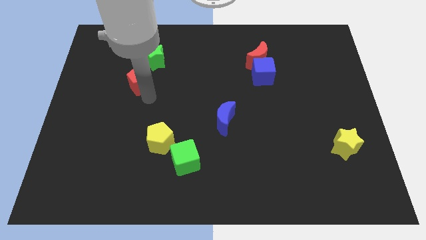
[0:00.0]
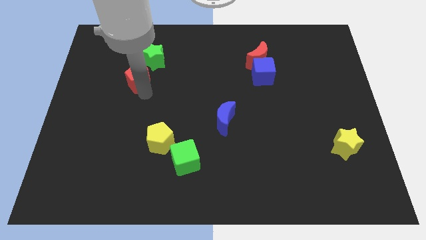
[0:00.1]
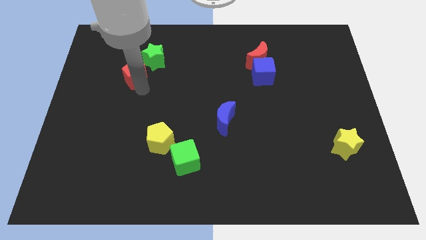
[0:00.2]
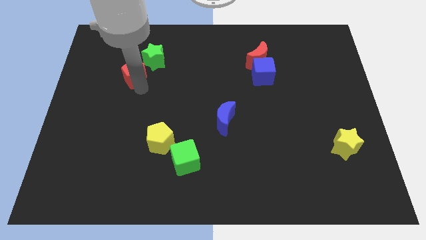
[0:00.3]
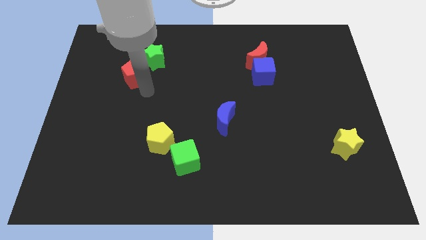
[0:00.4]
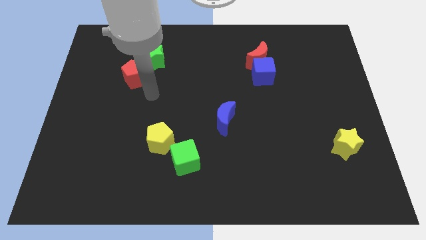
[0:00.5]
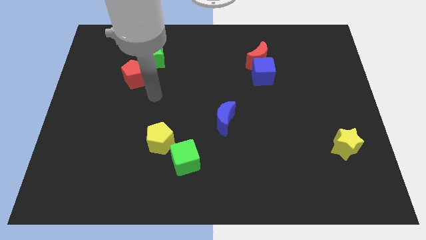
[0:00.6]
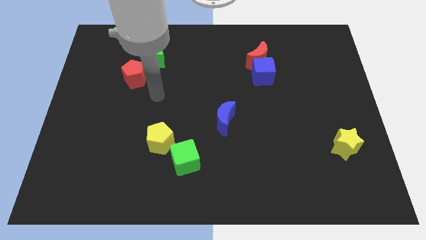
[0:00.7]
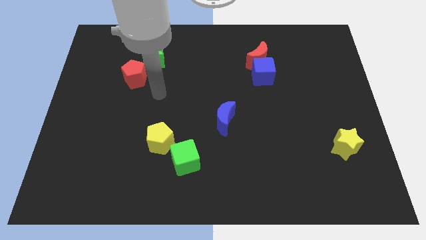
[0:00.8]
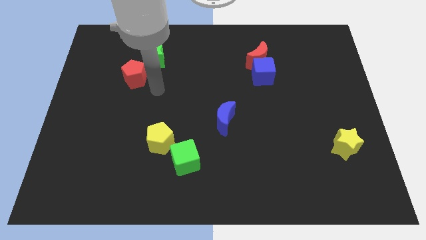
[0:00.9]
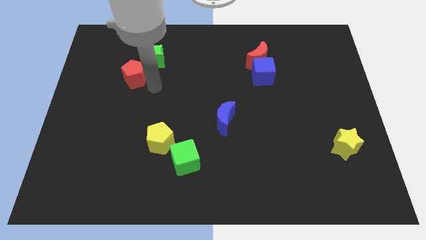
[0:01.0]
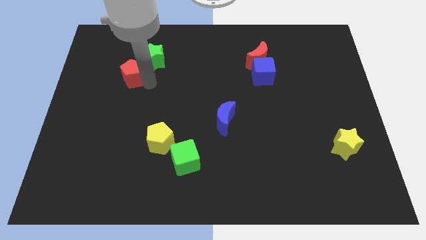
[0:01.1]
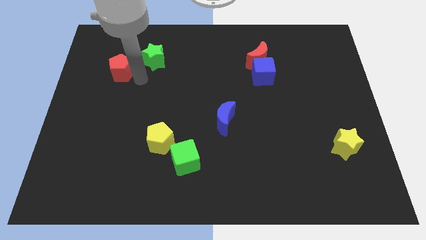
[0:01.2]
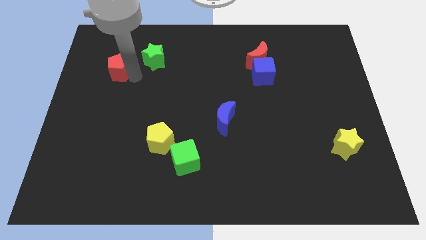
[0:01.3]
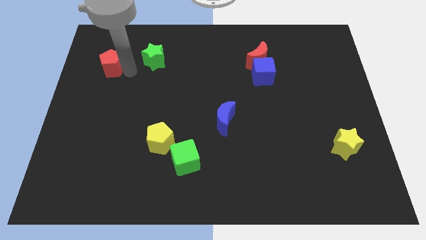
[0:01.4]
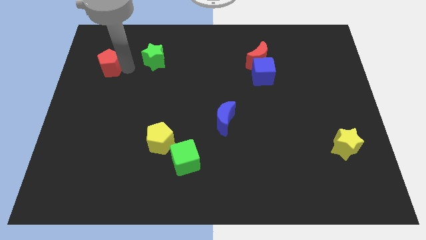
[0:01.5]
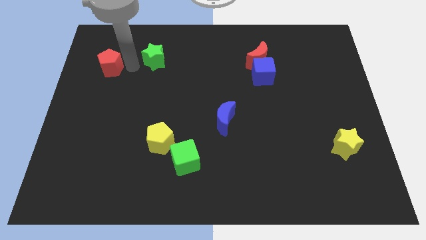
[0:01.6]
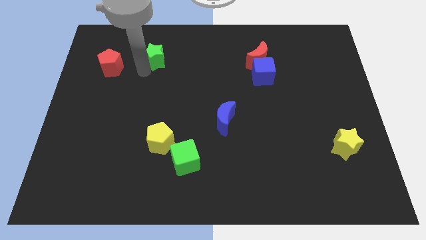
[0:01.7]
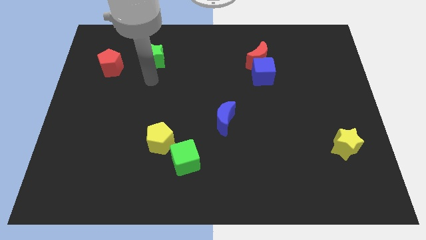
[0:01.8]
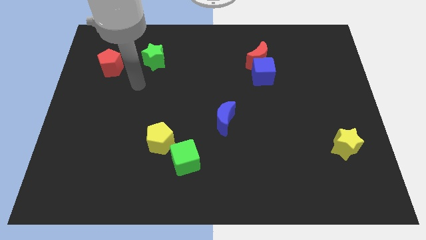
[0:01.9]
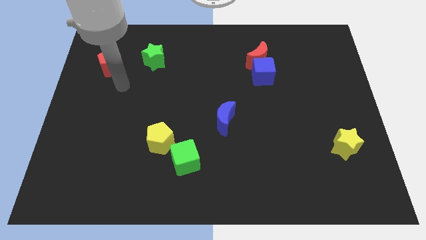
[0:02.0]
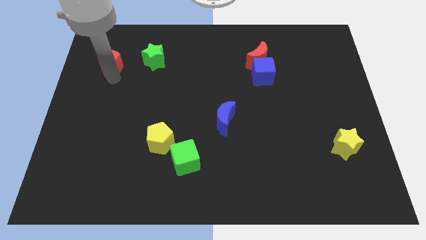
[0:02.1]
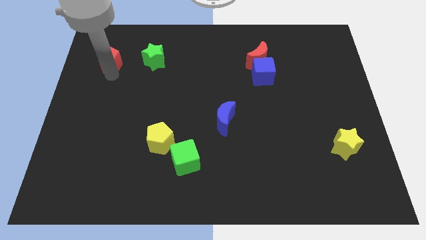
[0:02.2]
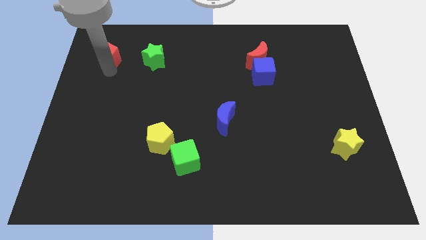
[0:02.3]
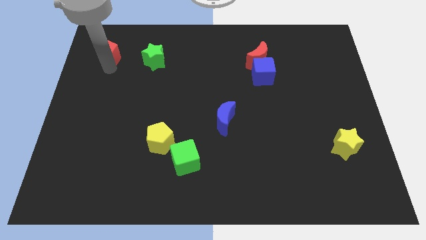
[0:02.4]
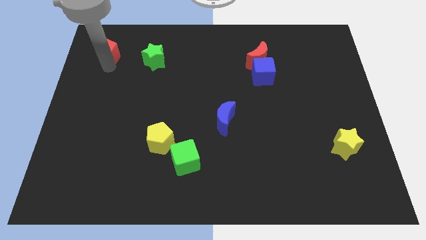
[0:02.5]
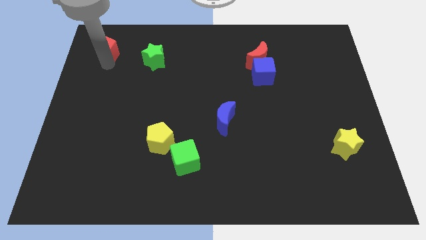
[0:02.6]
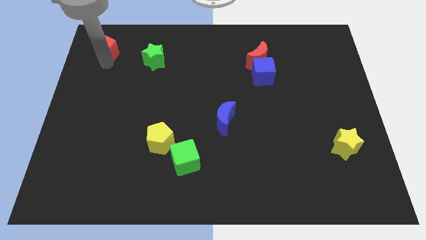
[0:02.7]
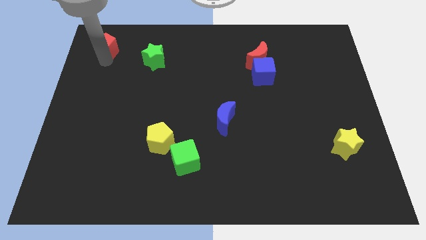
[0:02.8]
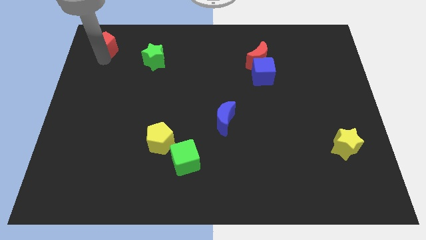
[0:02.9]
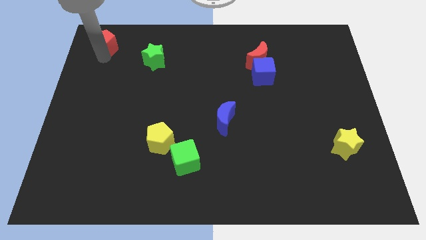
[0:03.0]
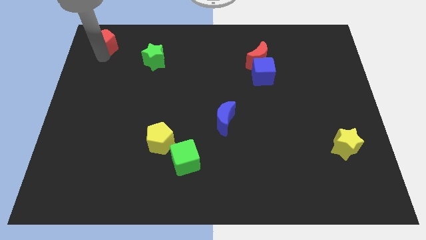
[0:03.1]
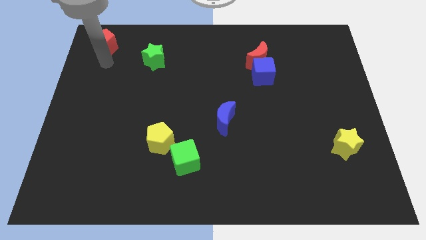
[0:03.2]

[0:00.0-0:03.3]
move the red pentagon to the top left of the green star

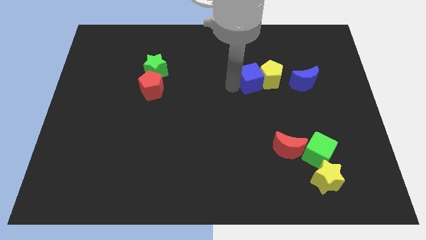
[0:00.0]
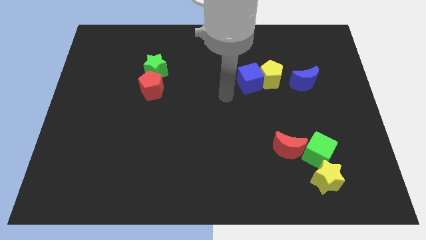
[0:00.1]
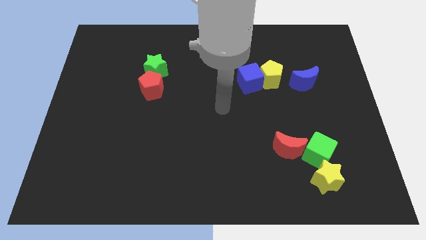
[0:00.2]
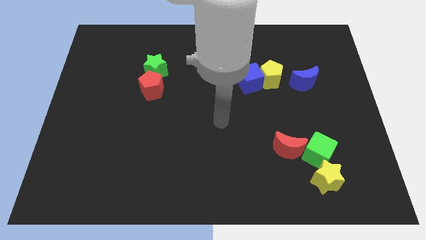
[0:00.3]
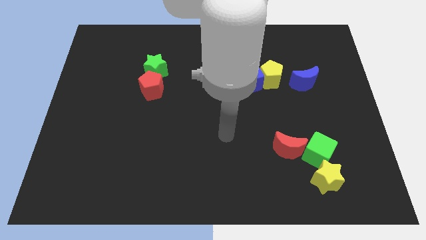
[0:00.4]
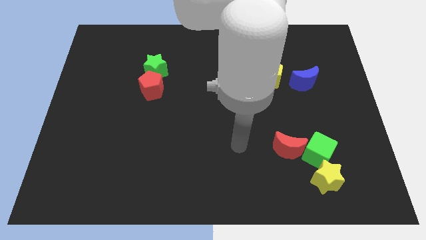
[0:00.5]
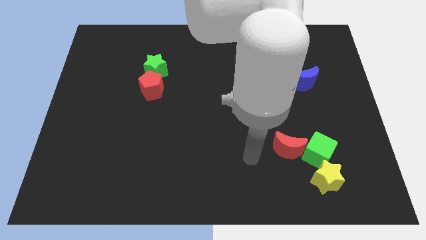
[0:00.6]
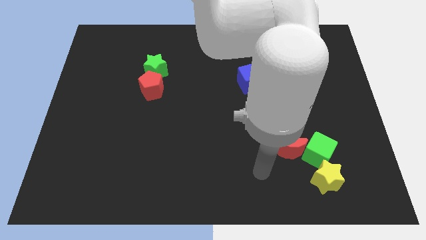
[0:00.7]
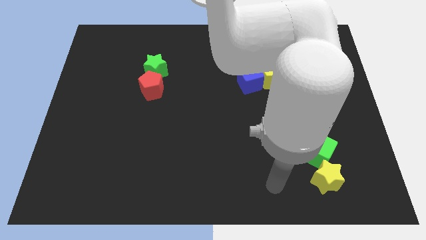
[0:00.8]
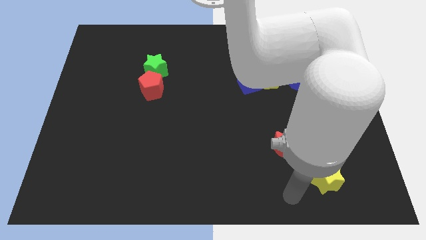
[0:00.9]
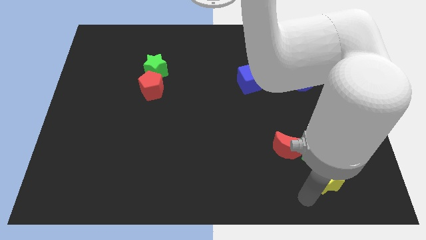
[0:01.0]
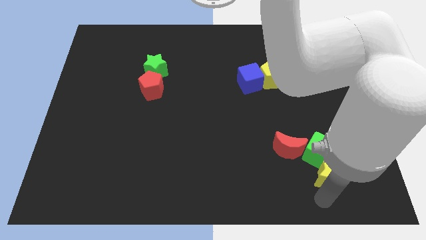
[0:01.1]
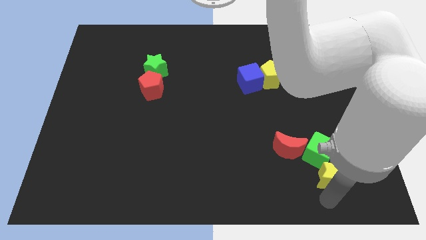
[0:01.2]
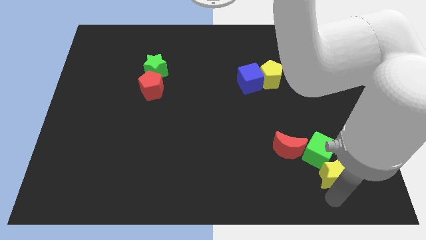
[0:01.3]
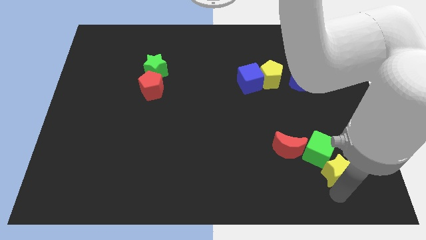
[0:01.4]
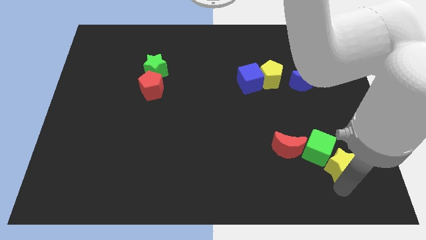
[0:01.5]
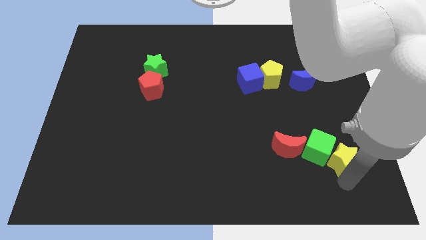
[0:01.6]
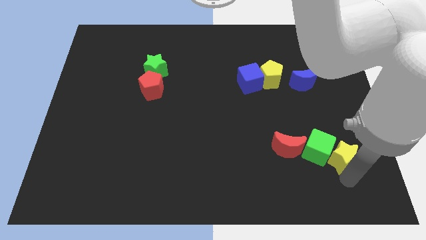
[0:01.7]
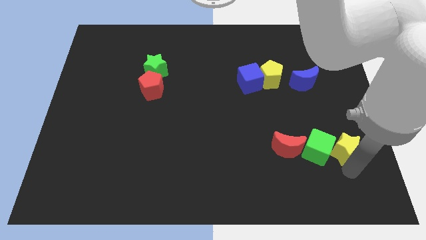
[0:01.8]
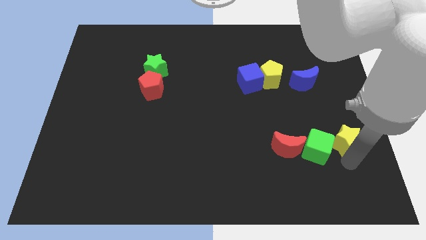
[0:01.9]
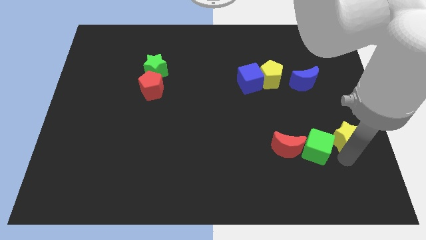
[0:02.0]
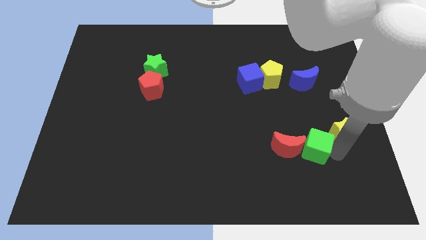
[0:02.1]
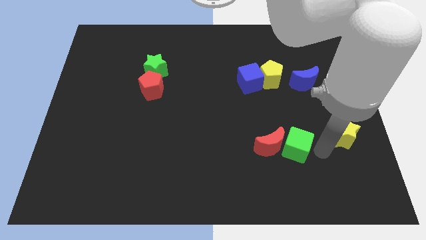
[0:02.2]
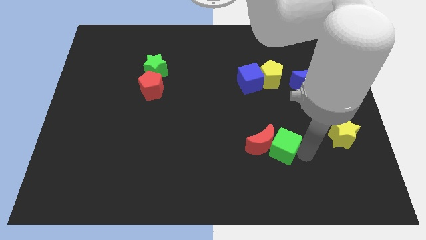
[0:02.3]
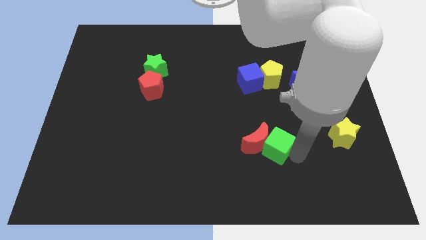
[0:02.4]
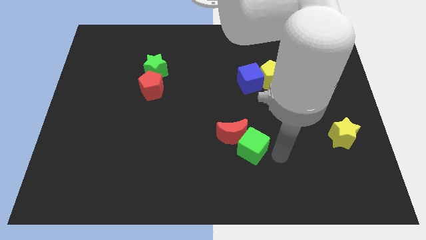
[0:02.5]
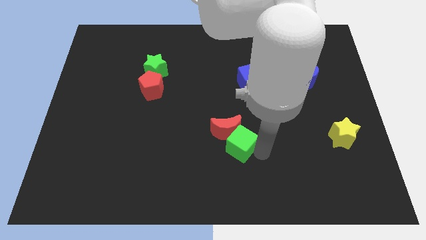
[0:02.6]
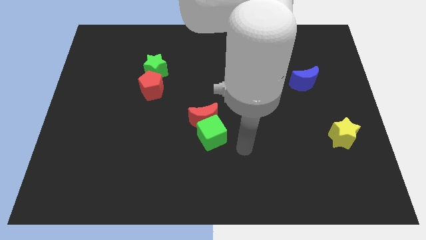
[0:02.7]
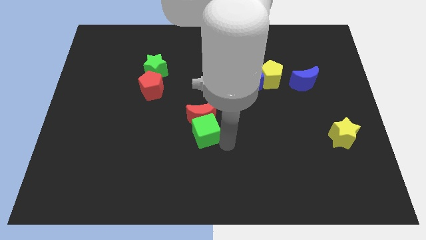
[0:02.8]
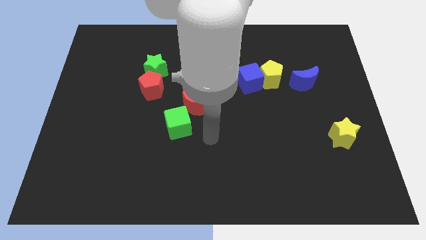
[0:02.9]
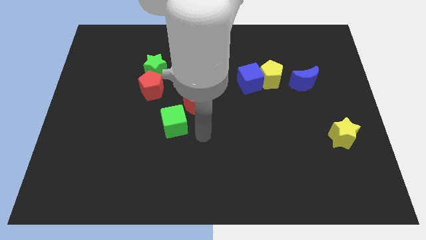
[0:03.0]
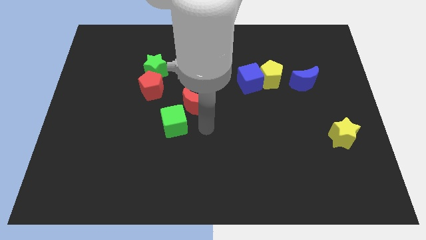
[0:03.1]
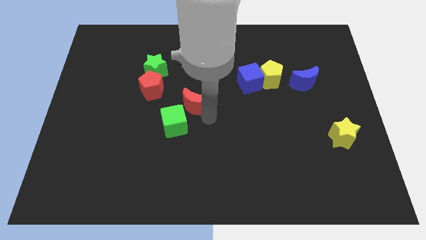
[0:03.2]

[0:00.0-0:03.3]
push both green cube and red f moon to center of the board

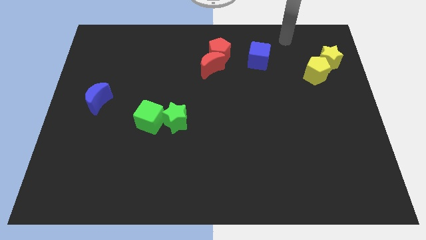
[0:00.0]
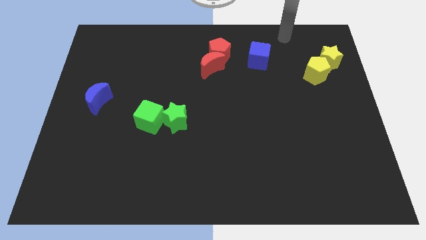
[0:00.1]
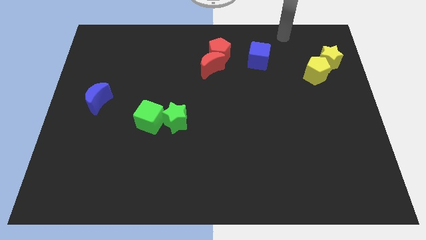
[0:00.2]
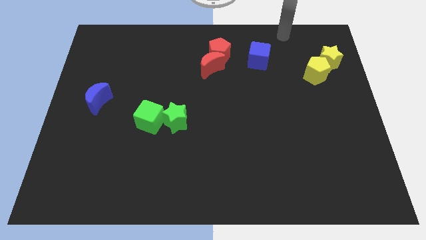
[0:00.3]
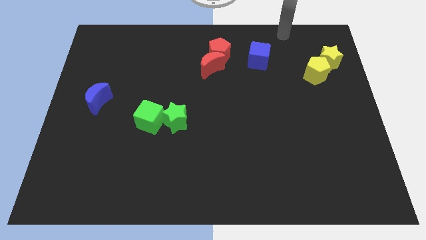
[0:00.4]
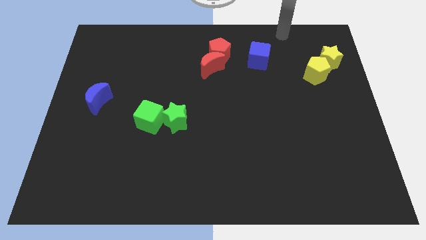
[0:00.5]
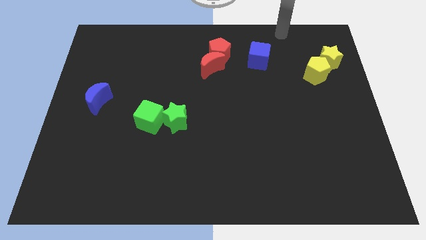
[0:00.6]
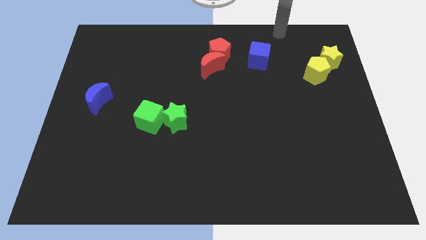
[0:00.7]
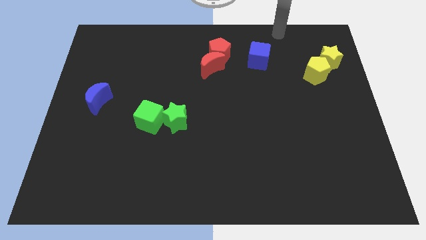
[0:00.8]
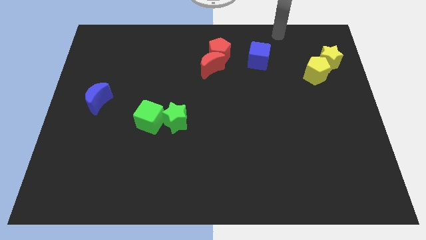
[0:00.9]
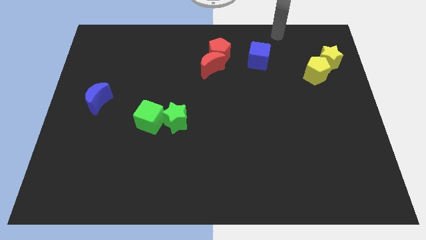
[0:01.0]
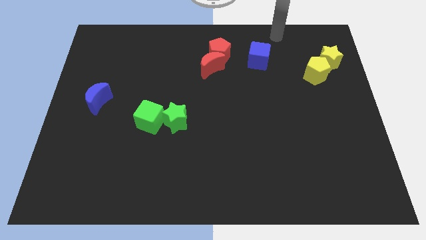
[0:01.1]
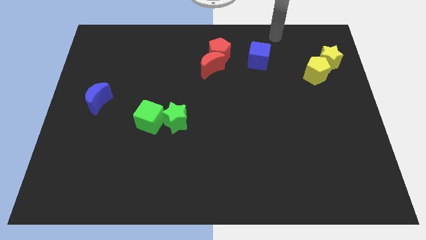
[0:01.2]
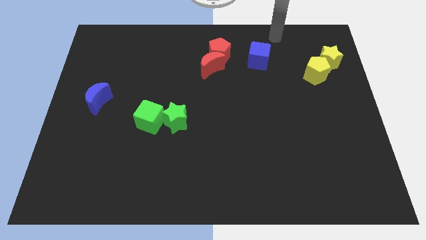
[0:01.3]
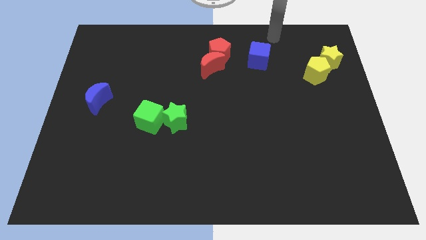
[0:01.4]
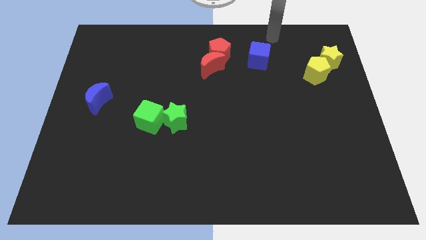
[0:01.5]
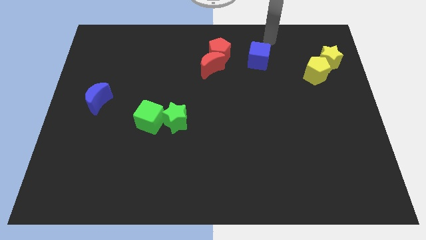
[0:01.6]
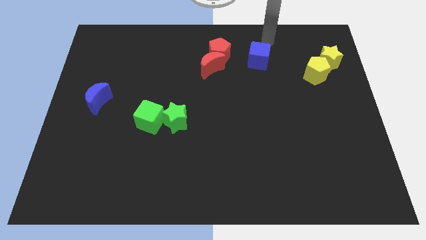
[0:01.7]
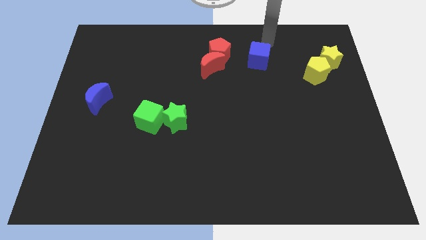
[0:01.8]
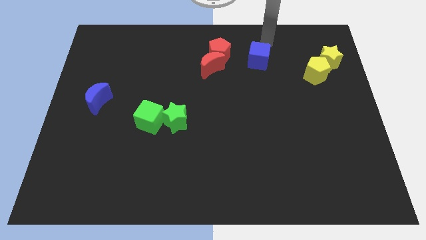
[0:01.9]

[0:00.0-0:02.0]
point your arm at the top of blue cube

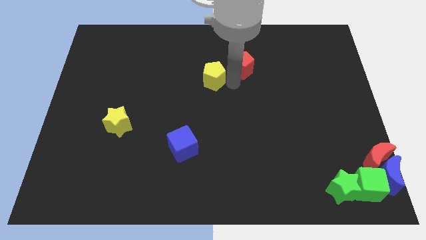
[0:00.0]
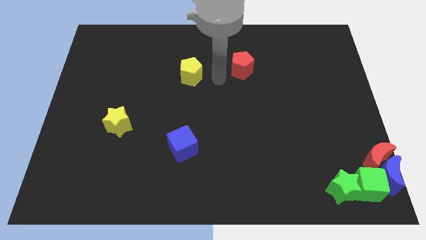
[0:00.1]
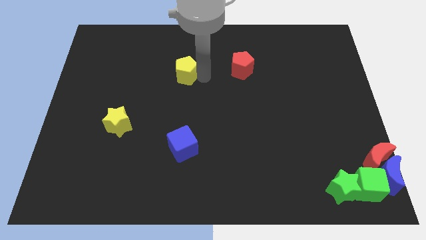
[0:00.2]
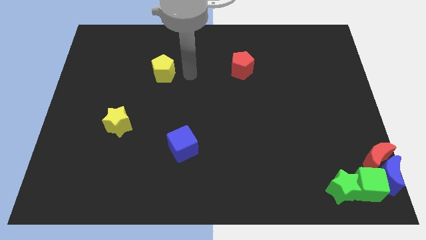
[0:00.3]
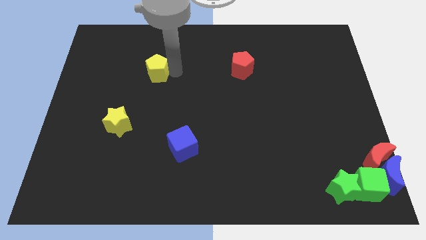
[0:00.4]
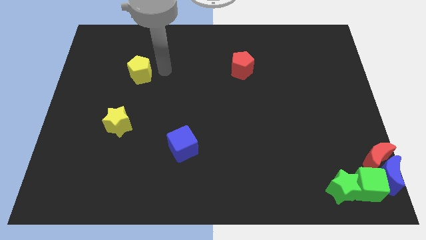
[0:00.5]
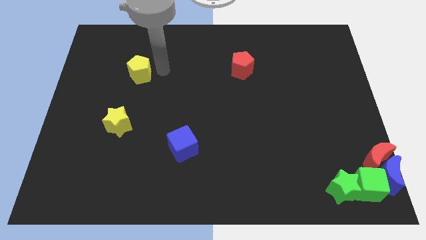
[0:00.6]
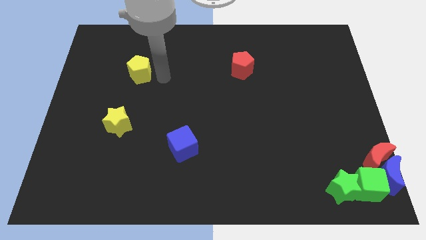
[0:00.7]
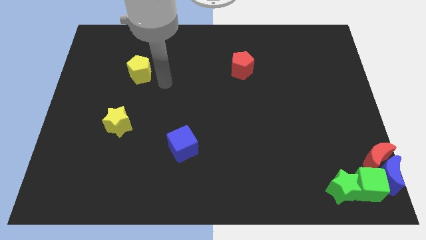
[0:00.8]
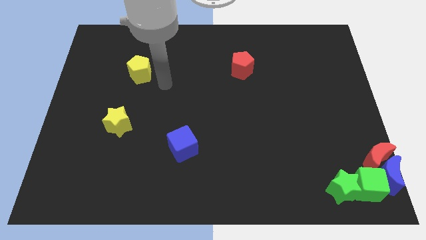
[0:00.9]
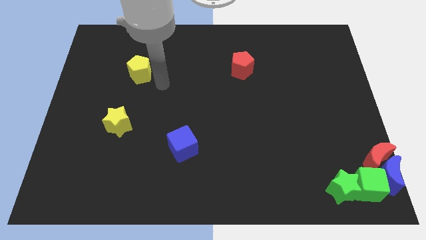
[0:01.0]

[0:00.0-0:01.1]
push the yellow pentagon to the top side of the yellow star
